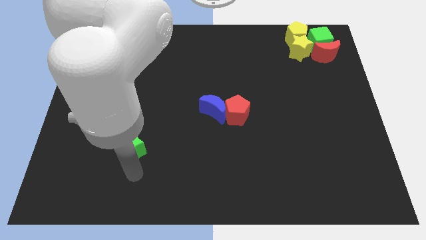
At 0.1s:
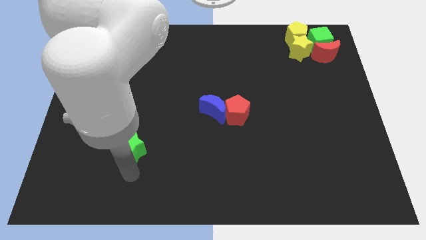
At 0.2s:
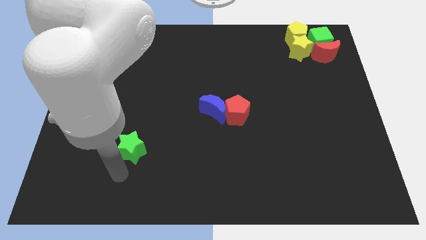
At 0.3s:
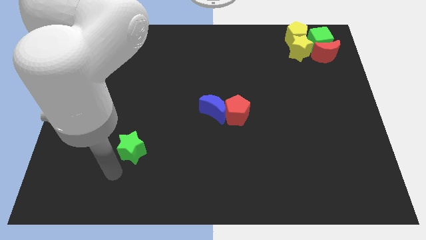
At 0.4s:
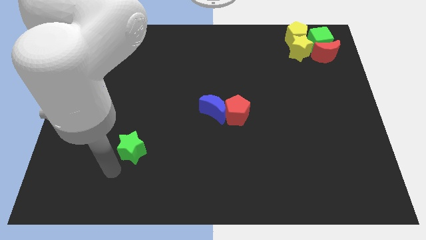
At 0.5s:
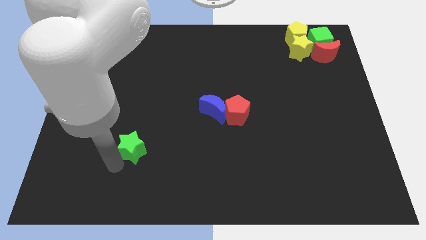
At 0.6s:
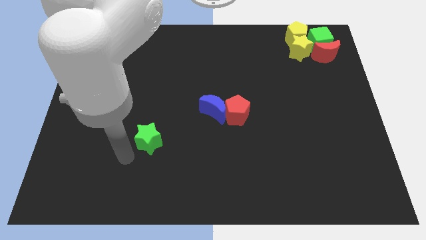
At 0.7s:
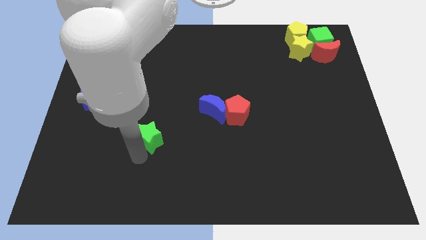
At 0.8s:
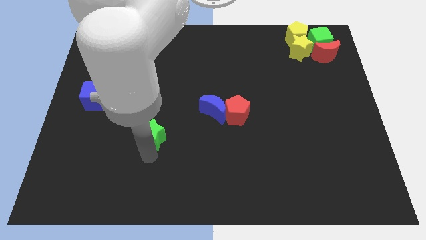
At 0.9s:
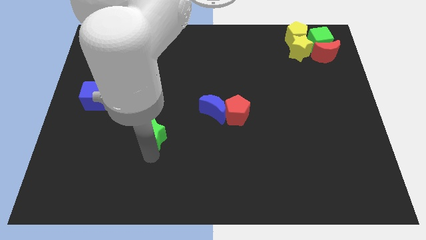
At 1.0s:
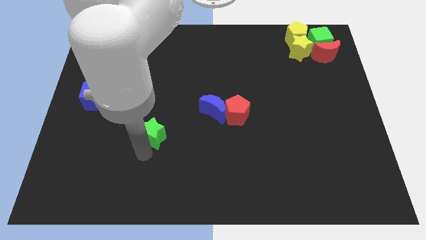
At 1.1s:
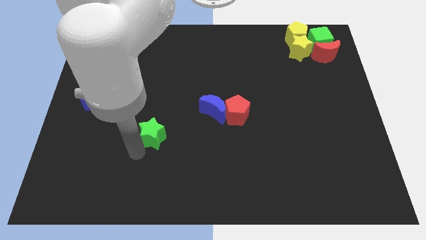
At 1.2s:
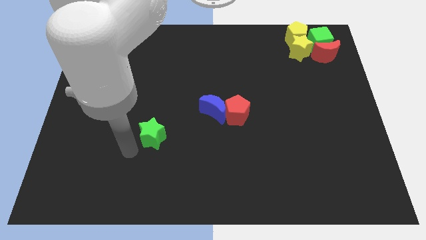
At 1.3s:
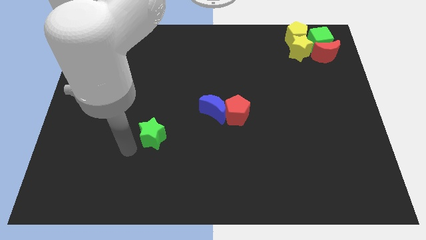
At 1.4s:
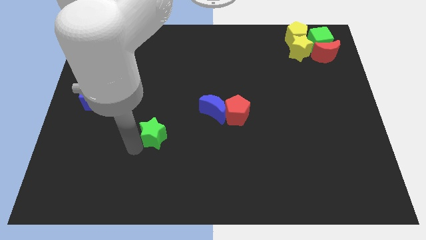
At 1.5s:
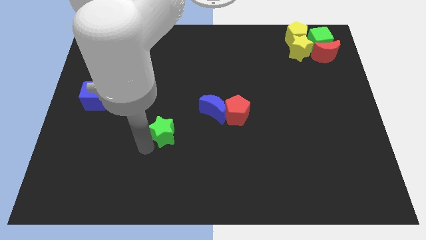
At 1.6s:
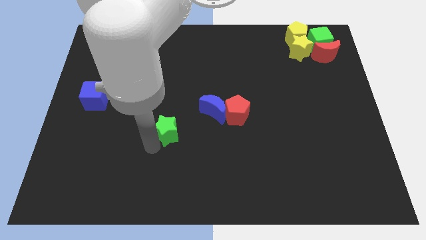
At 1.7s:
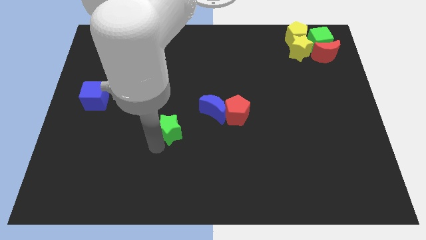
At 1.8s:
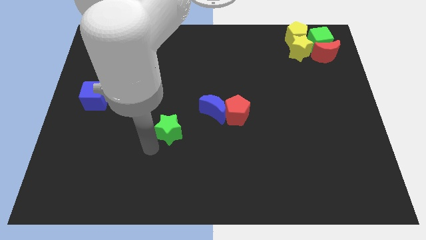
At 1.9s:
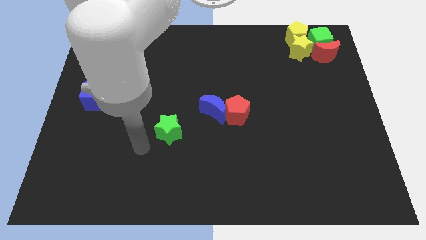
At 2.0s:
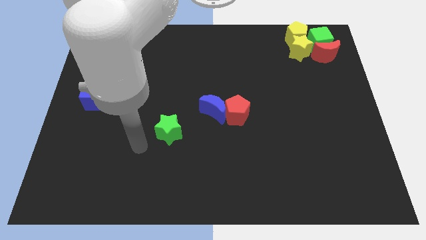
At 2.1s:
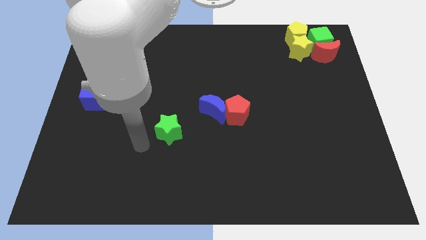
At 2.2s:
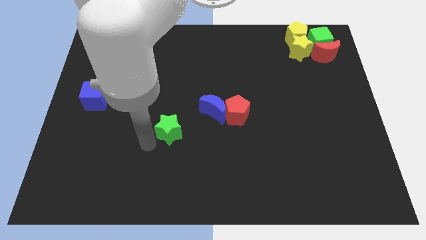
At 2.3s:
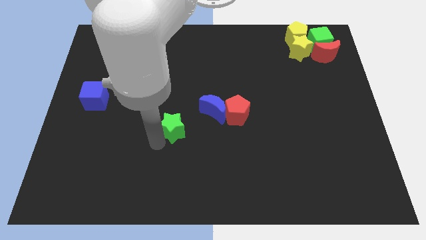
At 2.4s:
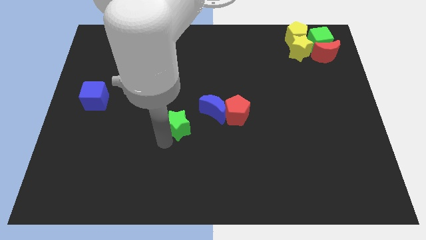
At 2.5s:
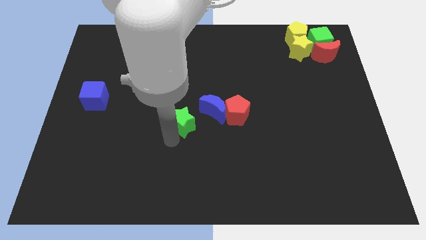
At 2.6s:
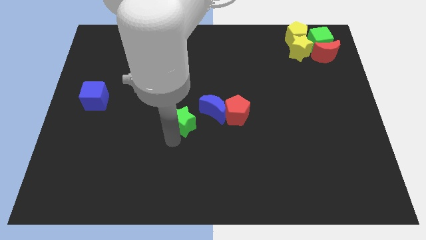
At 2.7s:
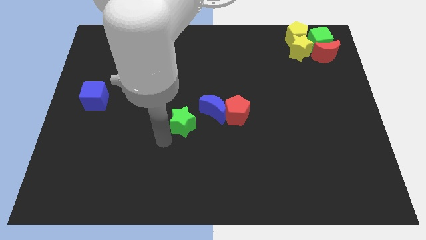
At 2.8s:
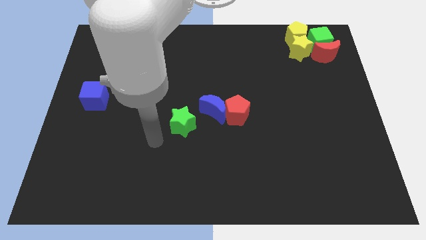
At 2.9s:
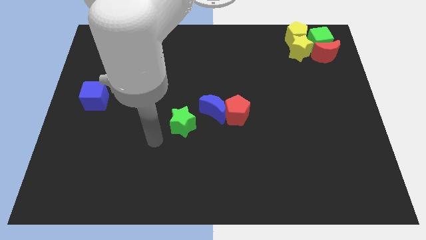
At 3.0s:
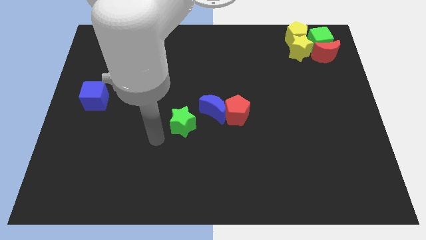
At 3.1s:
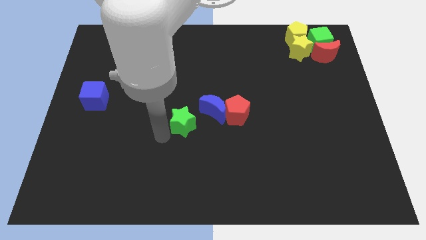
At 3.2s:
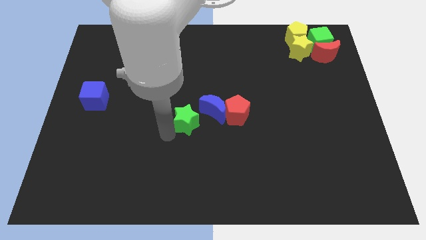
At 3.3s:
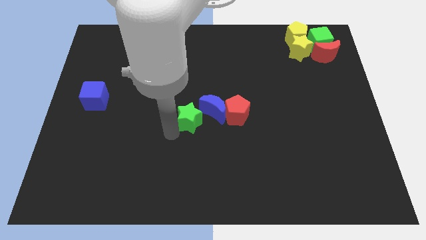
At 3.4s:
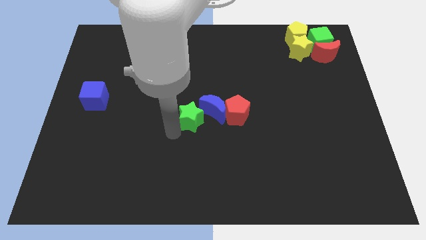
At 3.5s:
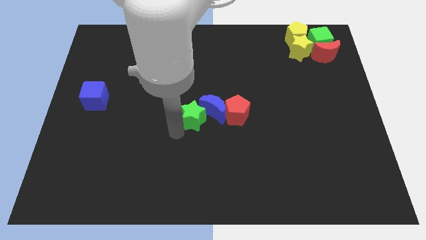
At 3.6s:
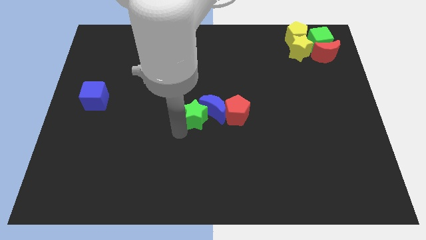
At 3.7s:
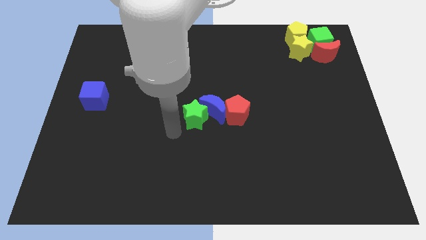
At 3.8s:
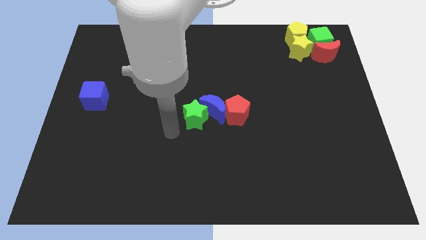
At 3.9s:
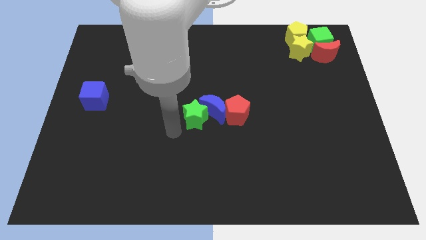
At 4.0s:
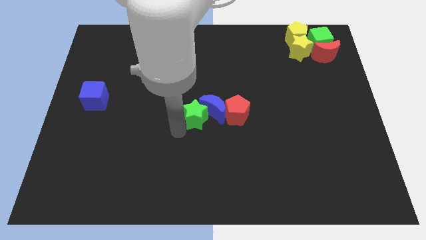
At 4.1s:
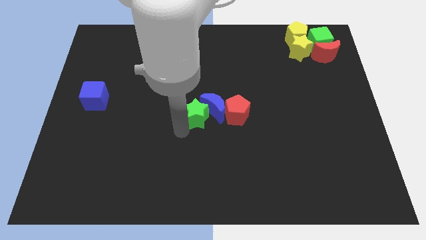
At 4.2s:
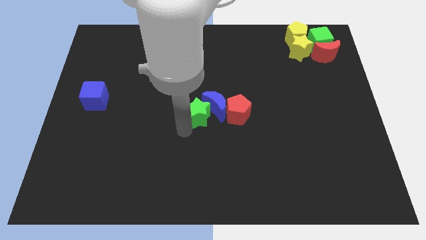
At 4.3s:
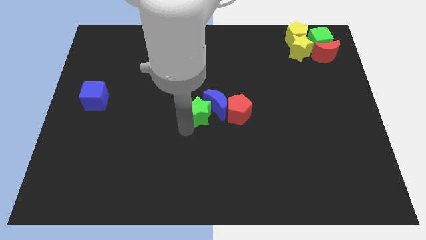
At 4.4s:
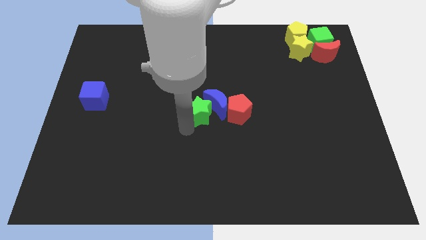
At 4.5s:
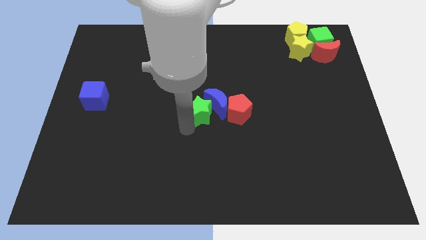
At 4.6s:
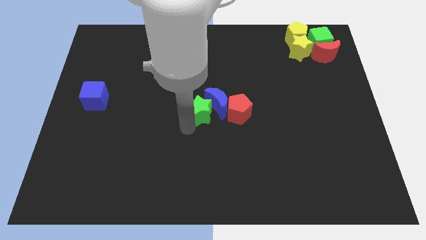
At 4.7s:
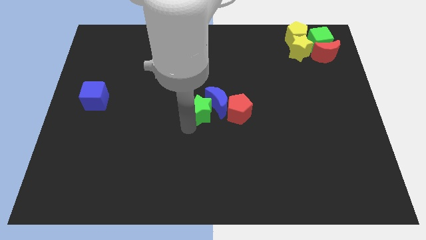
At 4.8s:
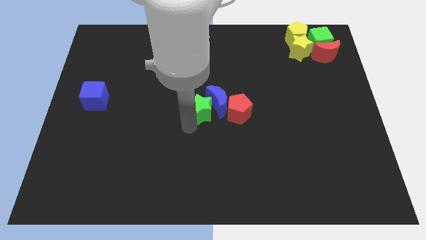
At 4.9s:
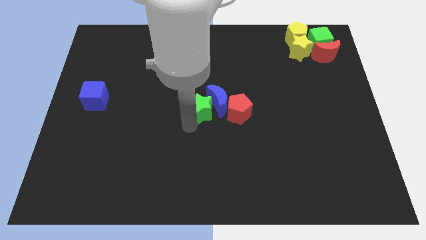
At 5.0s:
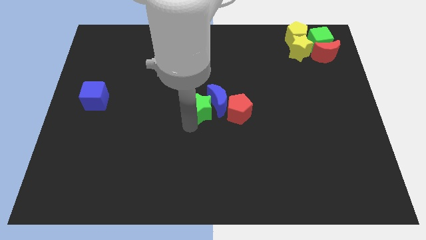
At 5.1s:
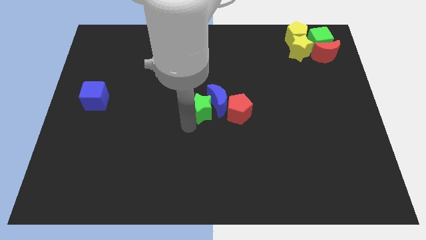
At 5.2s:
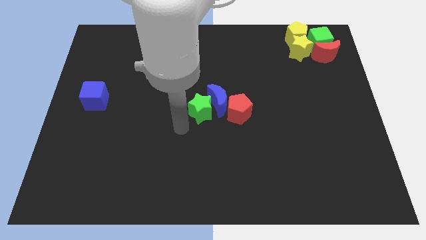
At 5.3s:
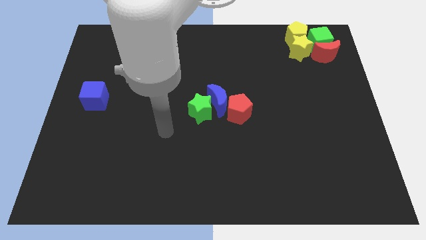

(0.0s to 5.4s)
put the green star to the left of the blue crescent

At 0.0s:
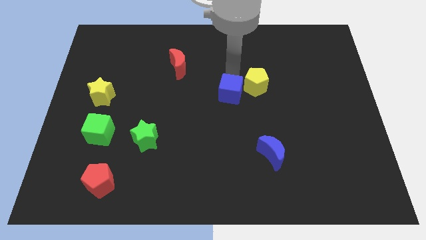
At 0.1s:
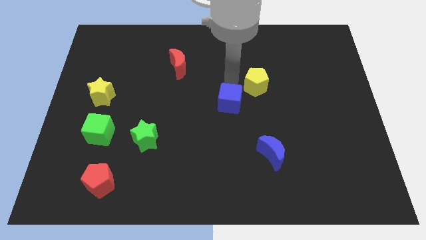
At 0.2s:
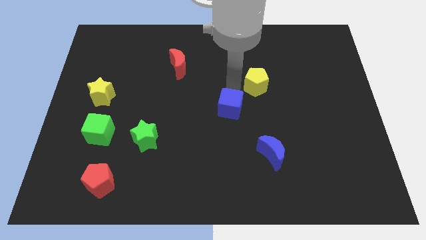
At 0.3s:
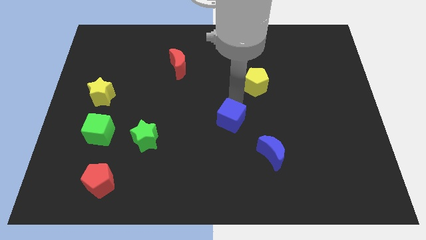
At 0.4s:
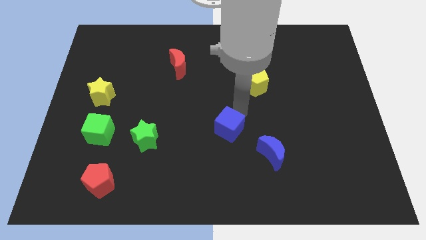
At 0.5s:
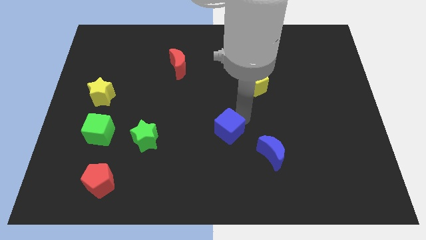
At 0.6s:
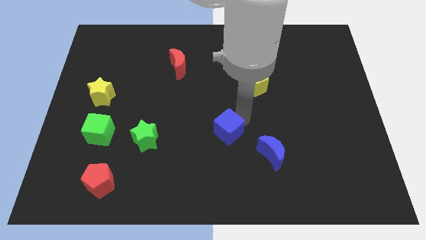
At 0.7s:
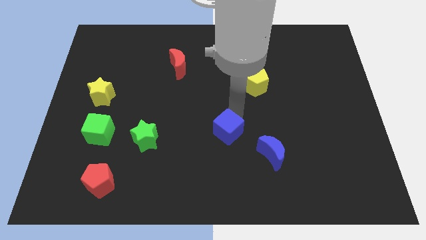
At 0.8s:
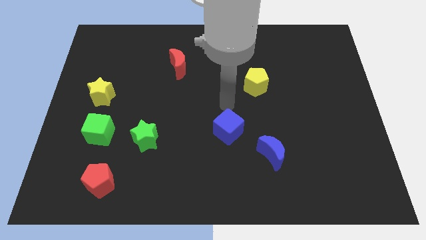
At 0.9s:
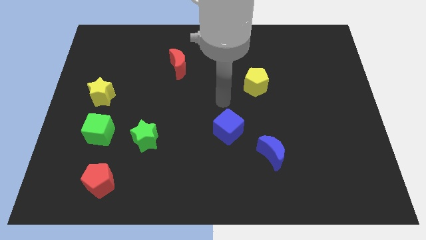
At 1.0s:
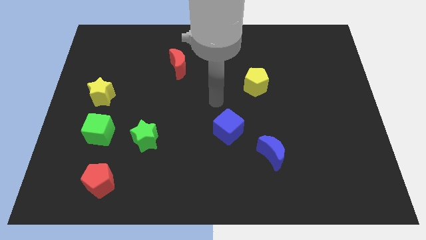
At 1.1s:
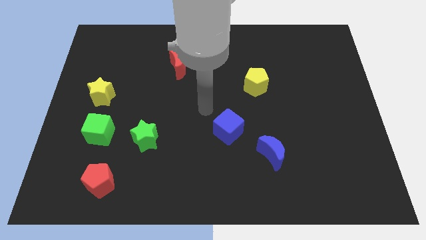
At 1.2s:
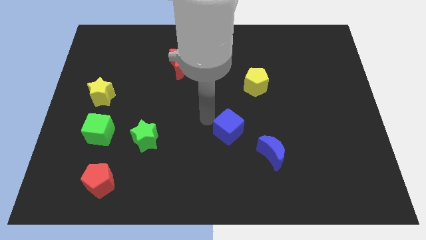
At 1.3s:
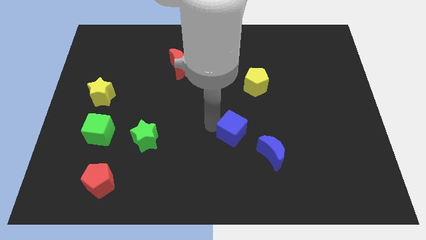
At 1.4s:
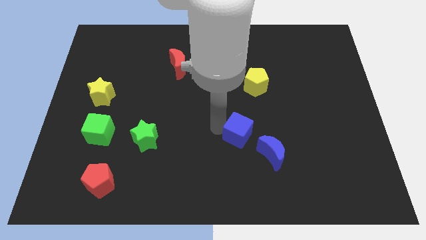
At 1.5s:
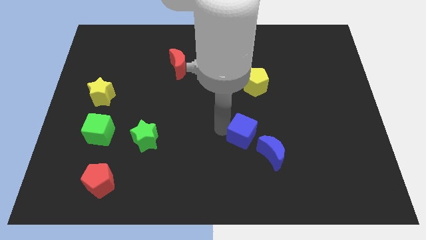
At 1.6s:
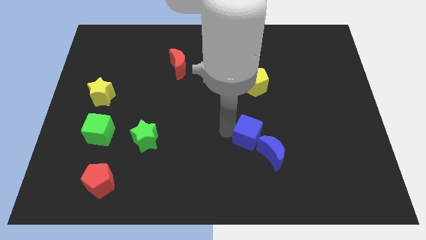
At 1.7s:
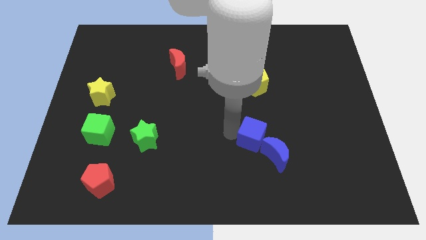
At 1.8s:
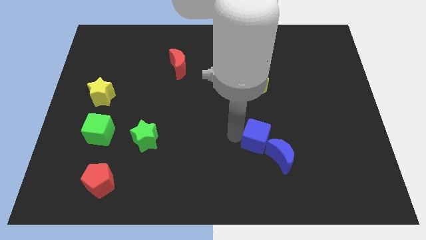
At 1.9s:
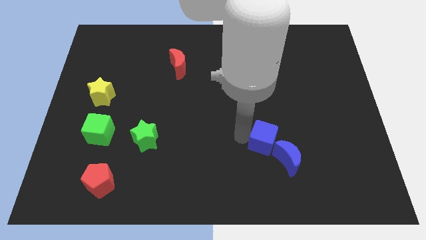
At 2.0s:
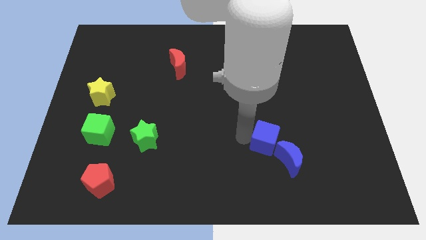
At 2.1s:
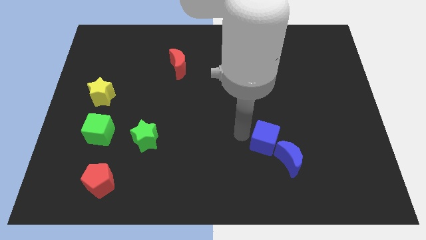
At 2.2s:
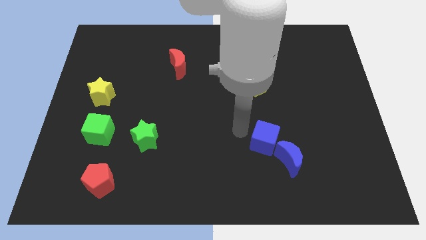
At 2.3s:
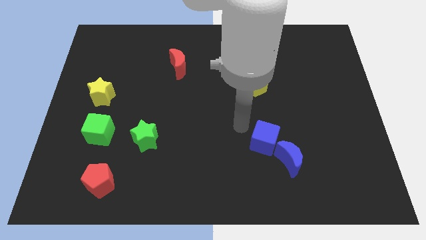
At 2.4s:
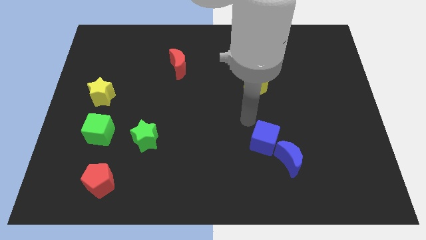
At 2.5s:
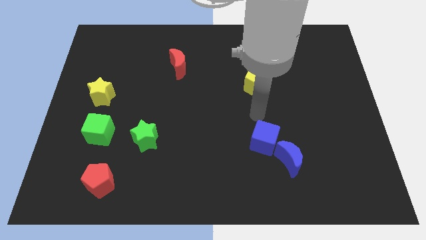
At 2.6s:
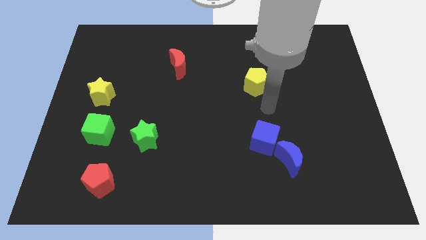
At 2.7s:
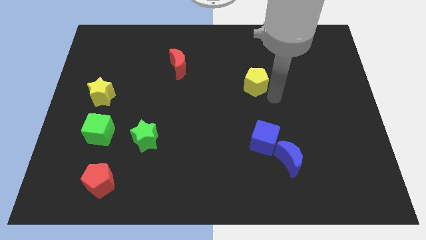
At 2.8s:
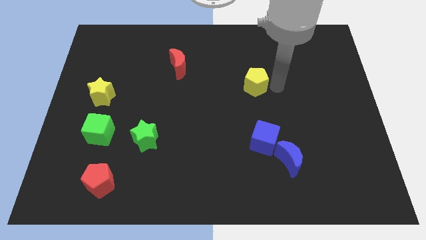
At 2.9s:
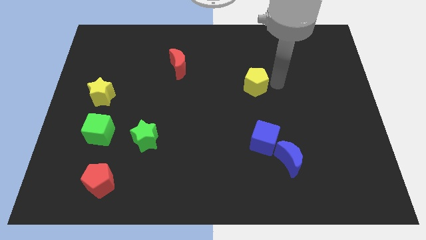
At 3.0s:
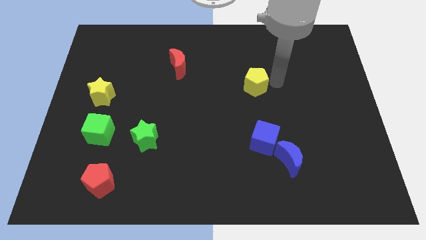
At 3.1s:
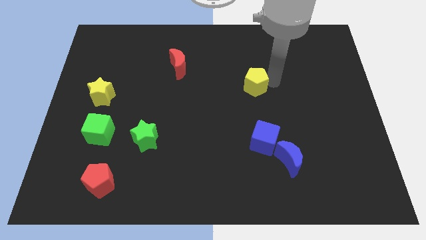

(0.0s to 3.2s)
move blue cube into the blue crescent

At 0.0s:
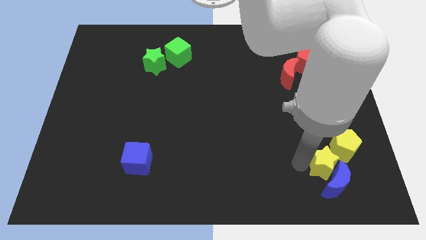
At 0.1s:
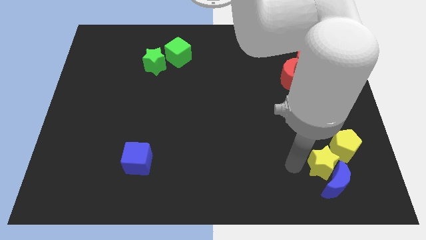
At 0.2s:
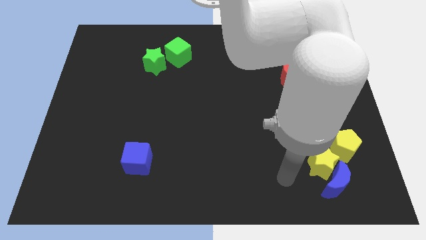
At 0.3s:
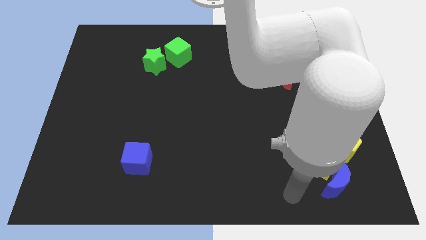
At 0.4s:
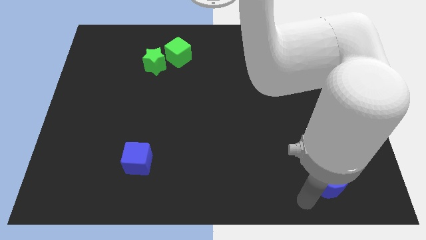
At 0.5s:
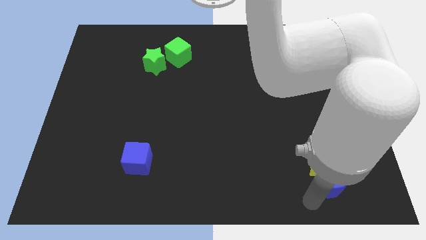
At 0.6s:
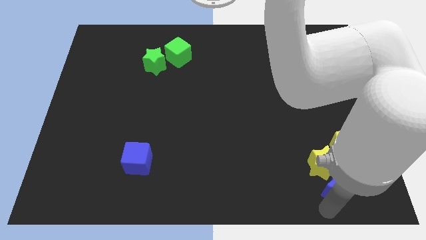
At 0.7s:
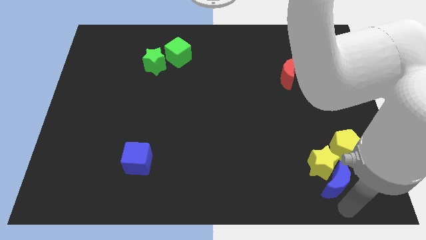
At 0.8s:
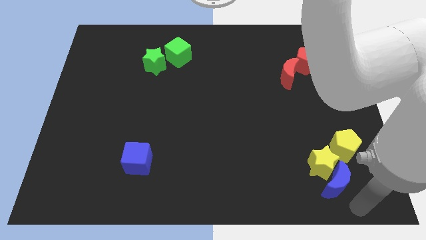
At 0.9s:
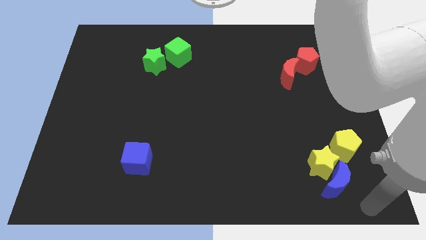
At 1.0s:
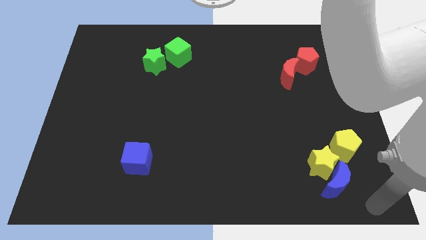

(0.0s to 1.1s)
move your hand away from the yellow star
